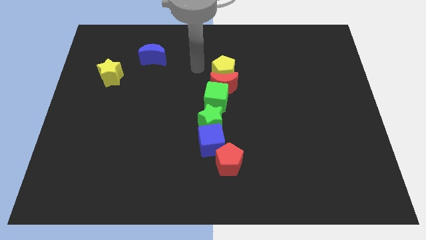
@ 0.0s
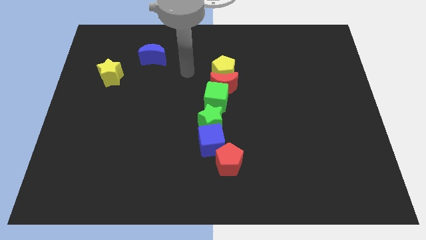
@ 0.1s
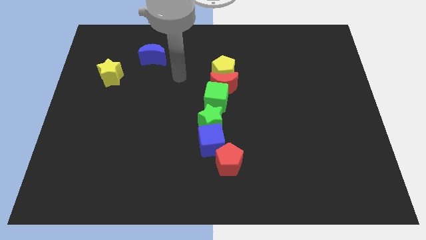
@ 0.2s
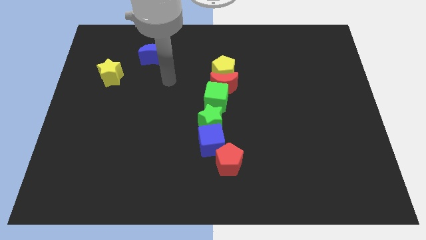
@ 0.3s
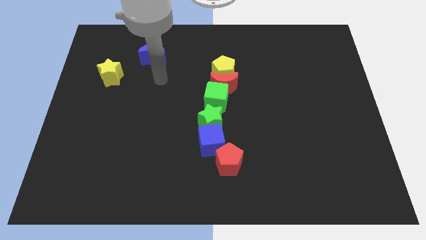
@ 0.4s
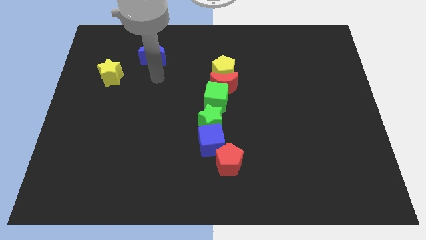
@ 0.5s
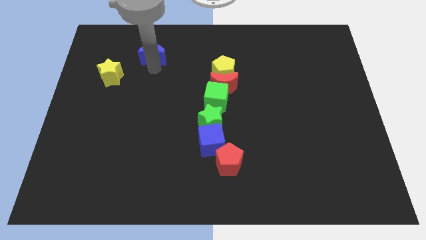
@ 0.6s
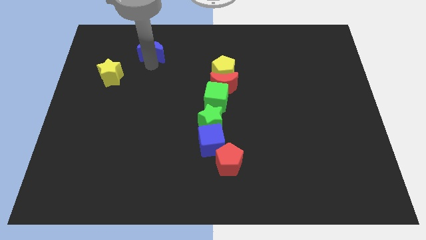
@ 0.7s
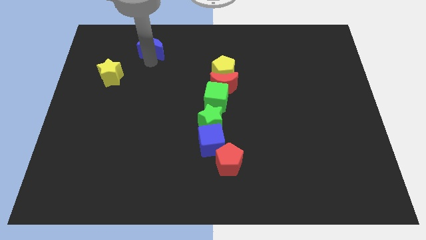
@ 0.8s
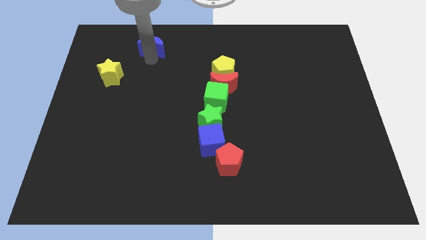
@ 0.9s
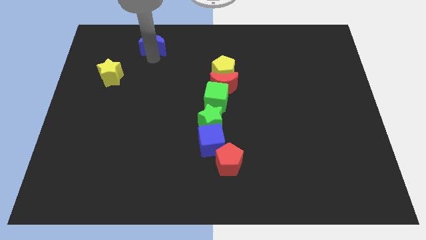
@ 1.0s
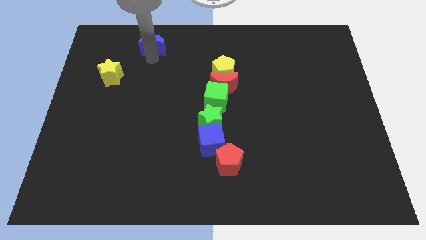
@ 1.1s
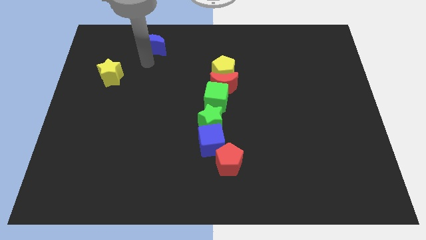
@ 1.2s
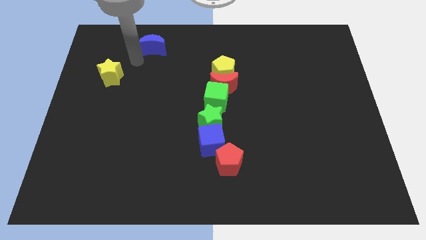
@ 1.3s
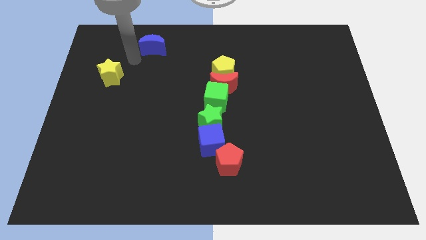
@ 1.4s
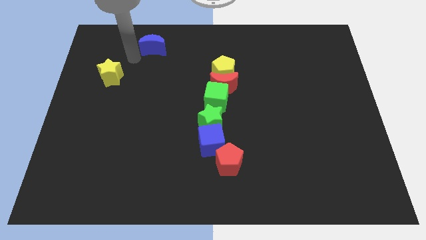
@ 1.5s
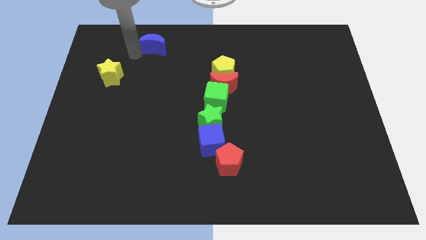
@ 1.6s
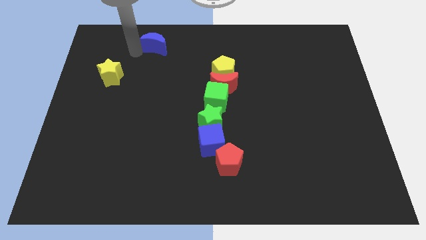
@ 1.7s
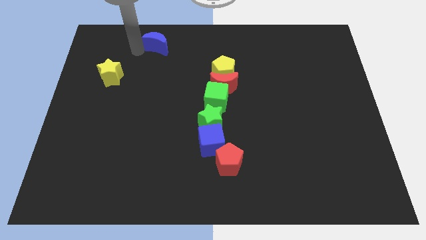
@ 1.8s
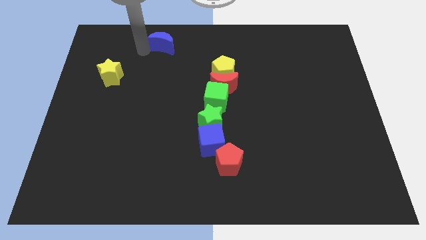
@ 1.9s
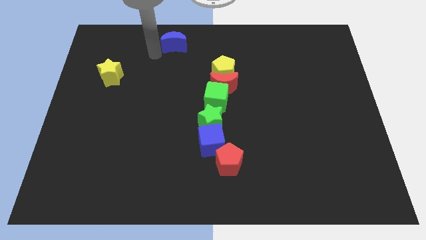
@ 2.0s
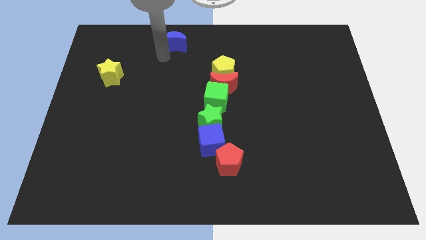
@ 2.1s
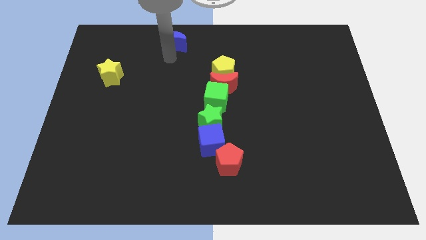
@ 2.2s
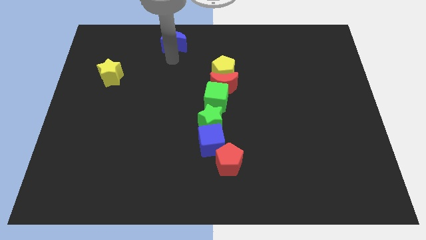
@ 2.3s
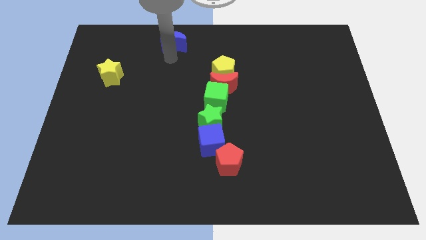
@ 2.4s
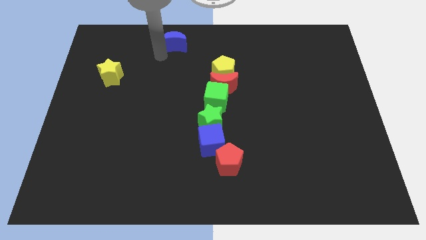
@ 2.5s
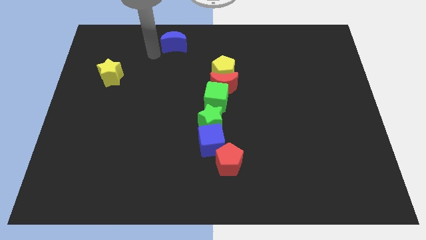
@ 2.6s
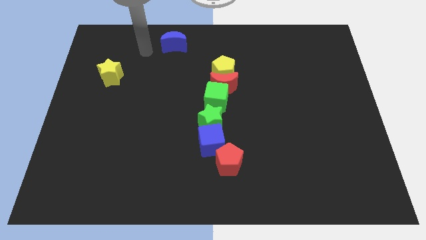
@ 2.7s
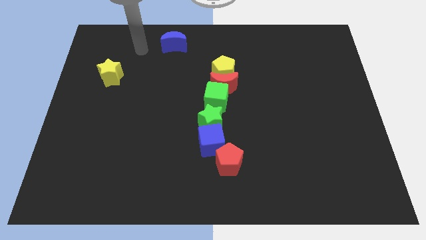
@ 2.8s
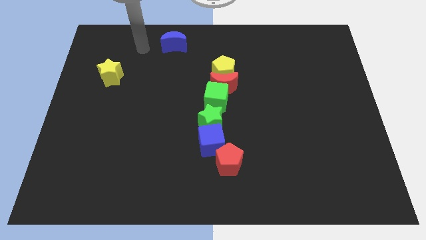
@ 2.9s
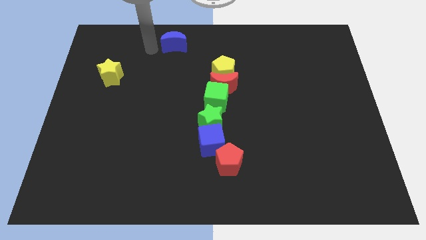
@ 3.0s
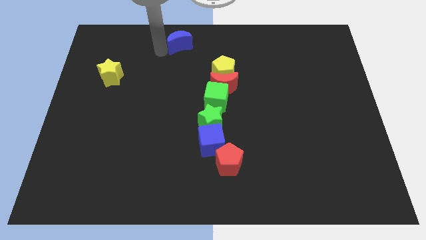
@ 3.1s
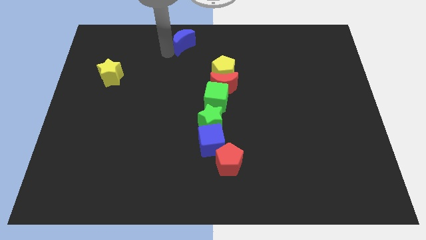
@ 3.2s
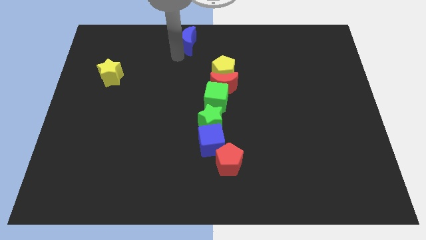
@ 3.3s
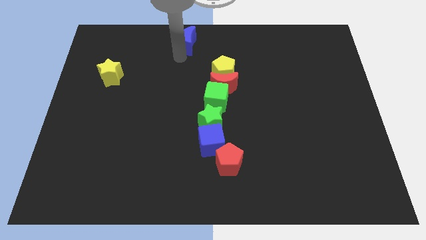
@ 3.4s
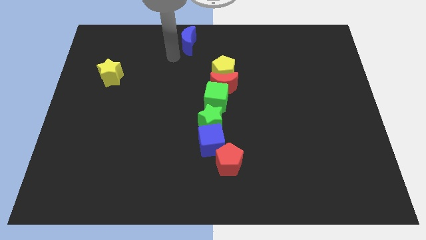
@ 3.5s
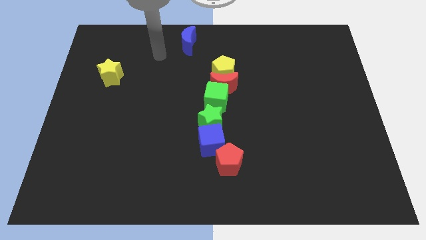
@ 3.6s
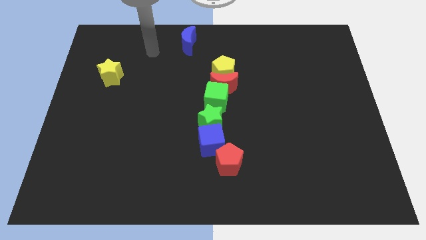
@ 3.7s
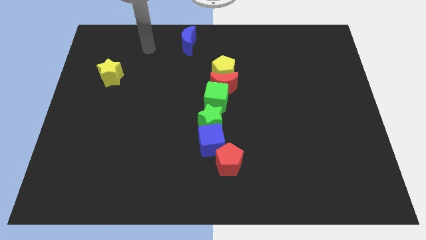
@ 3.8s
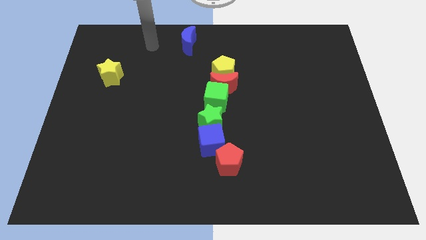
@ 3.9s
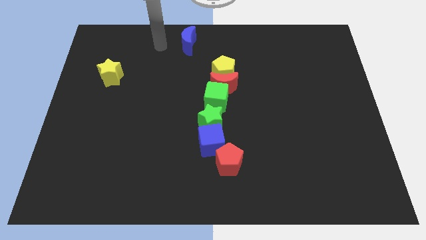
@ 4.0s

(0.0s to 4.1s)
move the blue crescent towards the top of the board

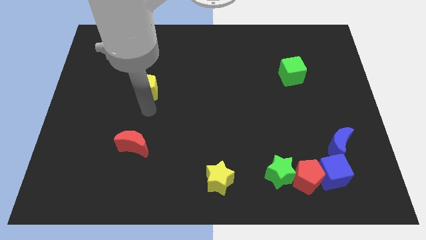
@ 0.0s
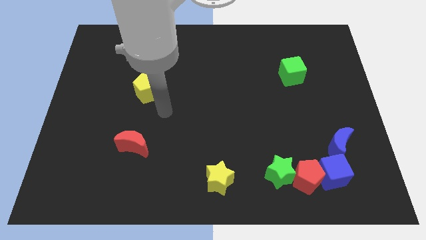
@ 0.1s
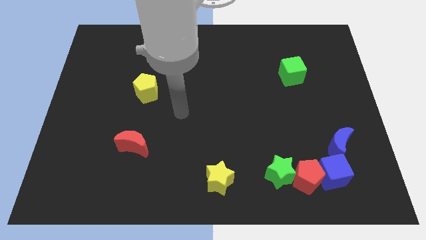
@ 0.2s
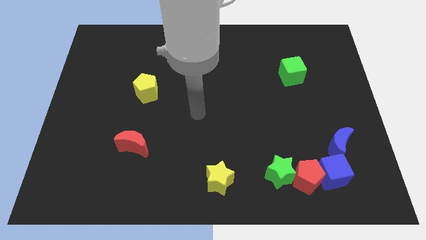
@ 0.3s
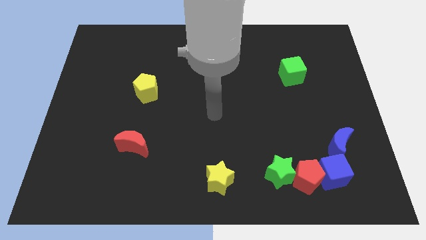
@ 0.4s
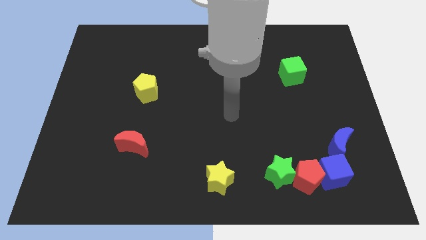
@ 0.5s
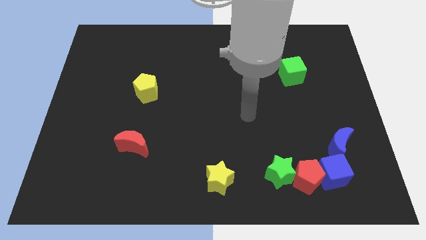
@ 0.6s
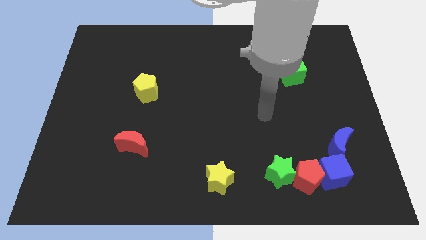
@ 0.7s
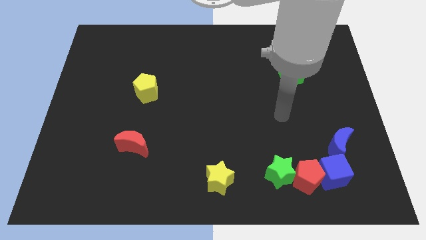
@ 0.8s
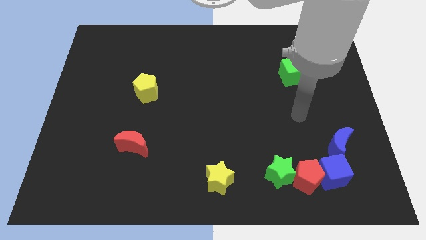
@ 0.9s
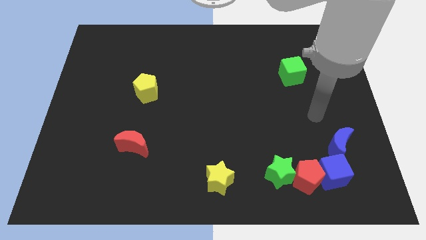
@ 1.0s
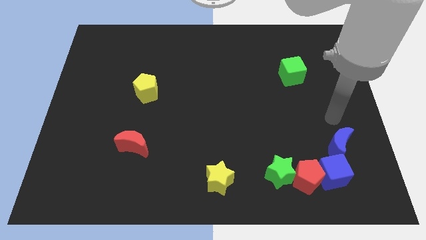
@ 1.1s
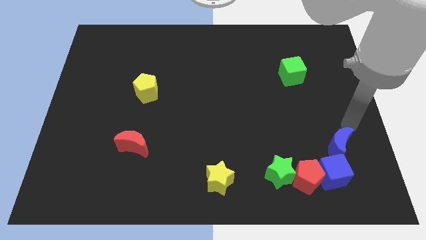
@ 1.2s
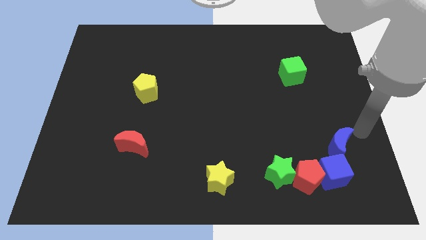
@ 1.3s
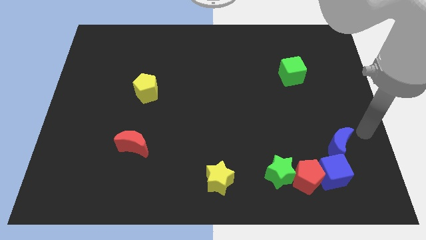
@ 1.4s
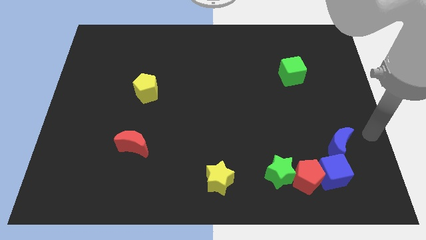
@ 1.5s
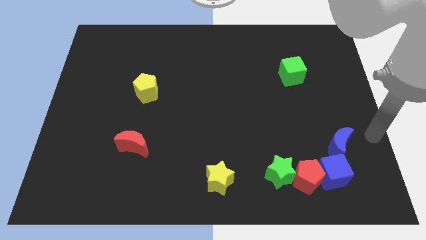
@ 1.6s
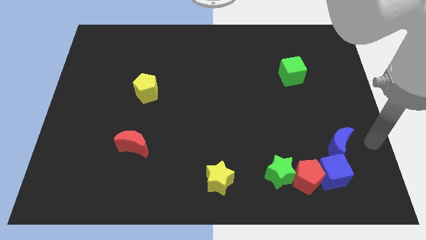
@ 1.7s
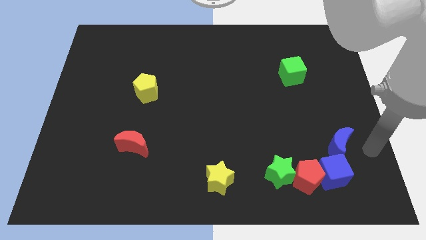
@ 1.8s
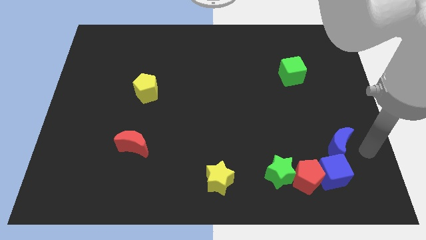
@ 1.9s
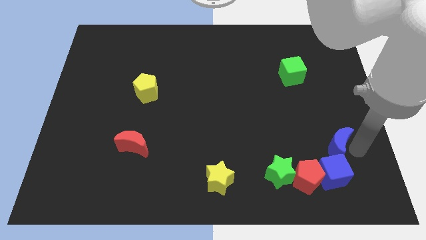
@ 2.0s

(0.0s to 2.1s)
point your arm towards right of blue moon

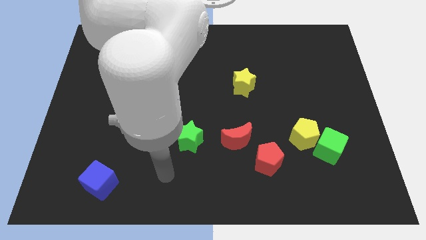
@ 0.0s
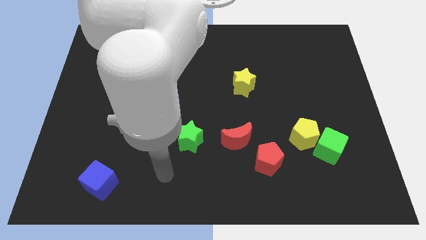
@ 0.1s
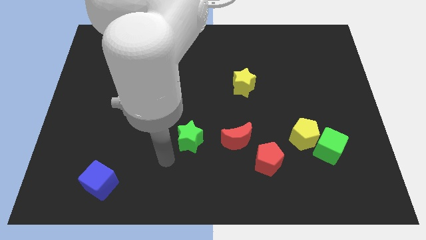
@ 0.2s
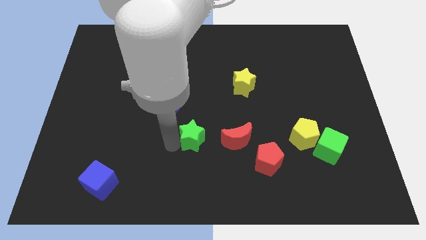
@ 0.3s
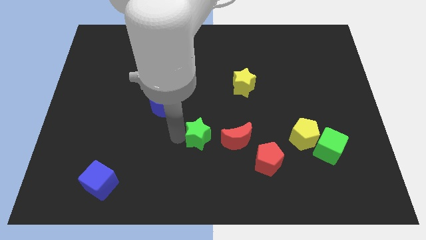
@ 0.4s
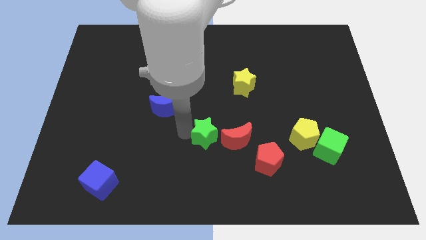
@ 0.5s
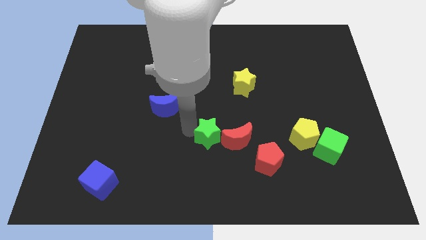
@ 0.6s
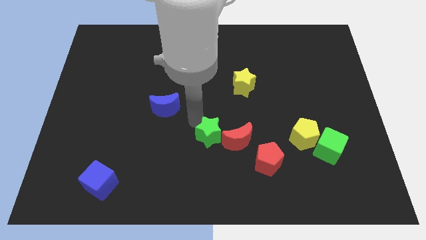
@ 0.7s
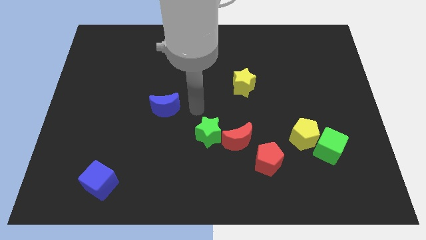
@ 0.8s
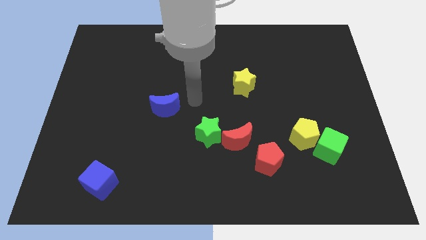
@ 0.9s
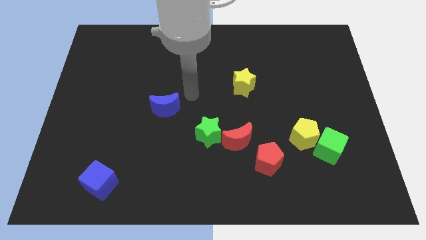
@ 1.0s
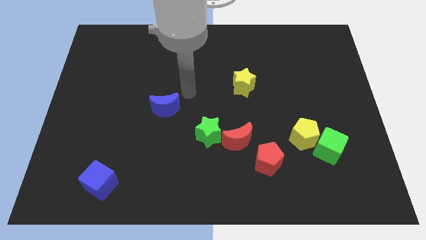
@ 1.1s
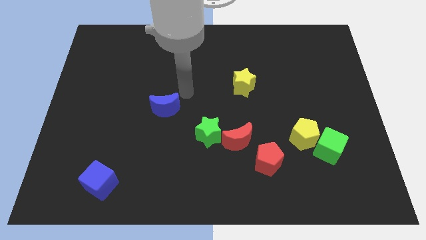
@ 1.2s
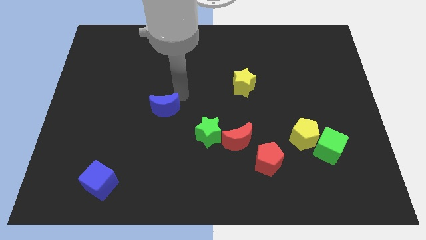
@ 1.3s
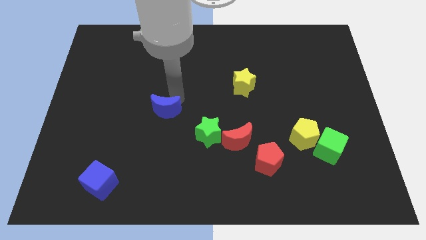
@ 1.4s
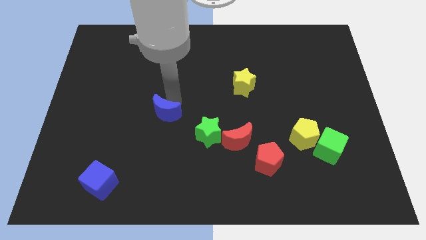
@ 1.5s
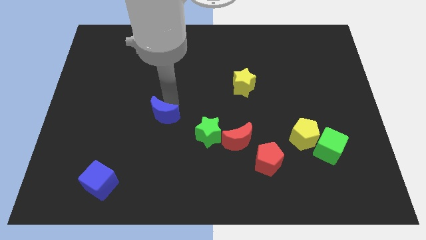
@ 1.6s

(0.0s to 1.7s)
push the green star into the red moon

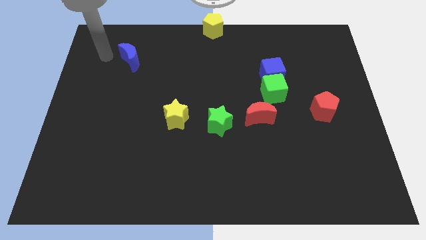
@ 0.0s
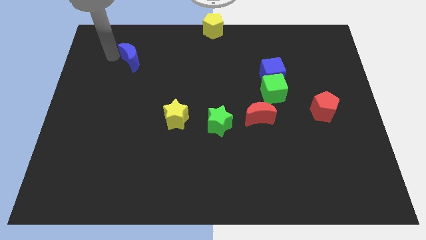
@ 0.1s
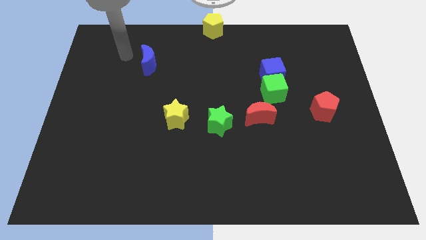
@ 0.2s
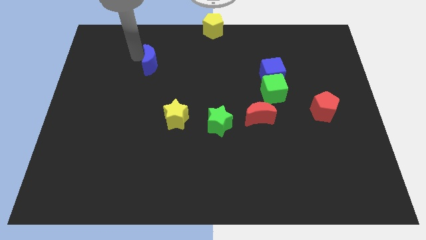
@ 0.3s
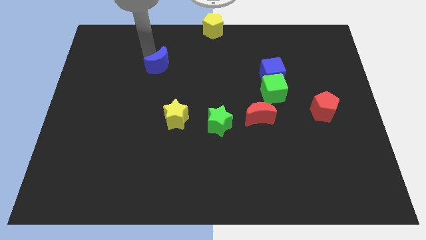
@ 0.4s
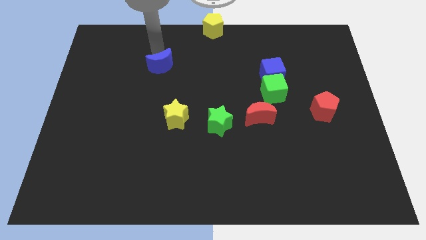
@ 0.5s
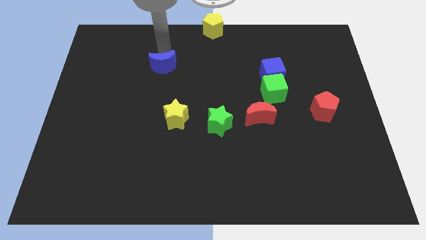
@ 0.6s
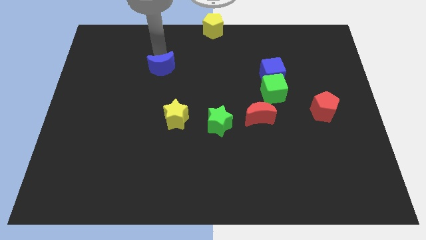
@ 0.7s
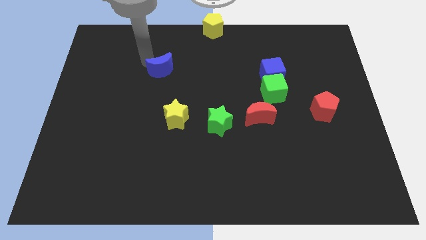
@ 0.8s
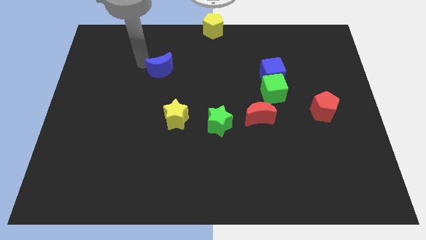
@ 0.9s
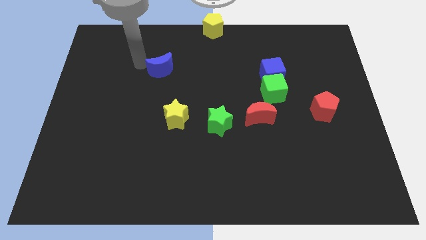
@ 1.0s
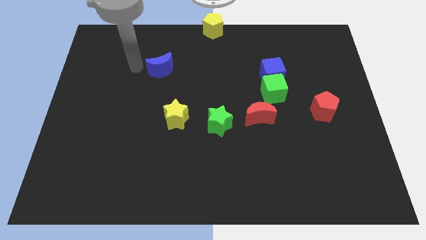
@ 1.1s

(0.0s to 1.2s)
move the blue crescent parallel to the top left of the blue cube
